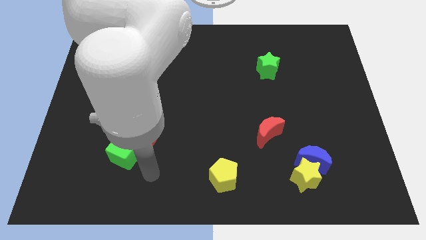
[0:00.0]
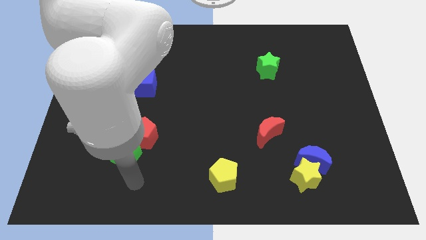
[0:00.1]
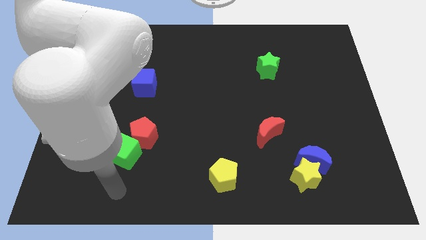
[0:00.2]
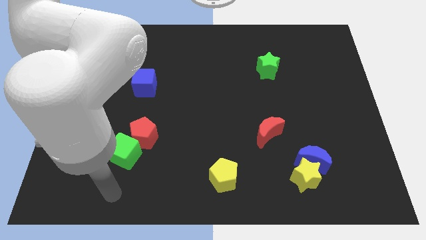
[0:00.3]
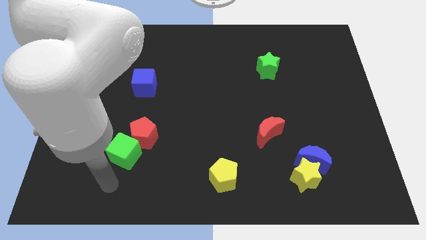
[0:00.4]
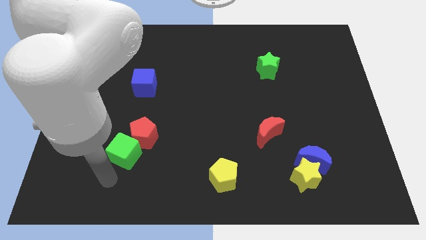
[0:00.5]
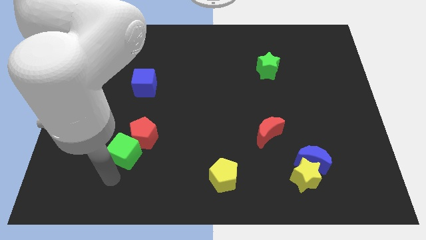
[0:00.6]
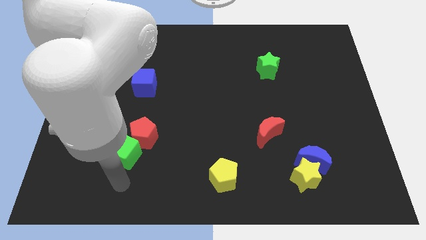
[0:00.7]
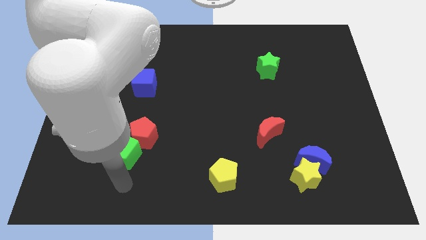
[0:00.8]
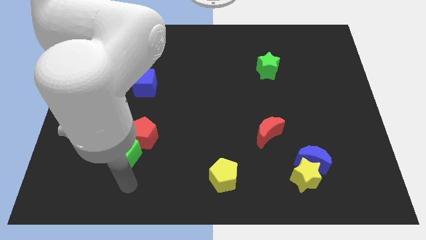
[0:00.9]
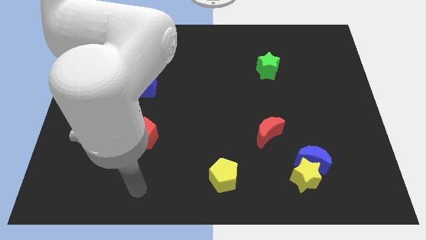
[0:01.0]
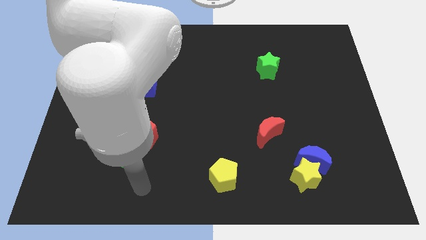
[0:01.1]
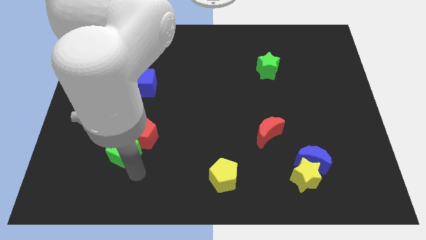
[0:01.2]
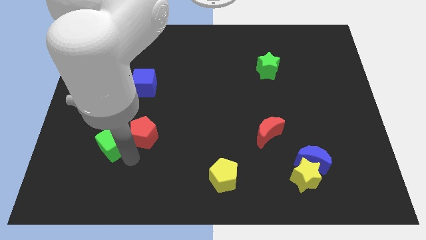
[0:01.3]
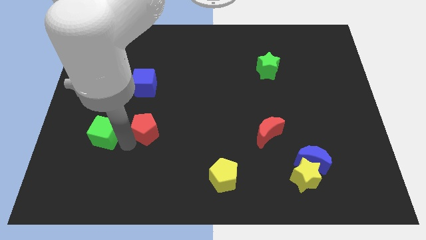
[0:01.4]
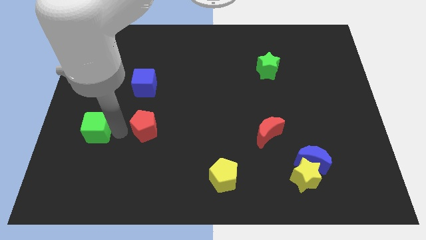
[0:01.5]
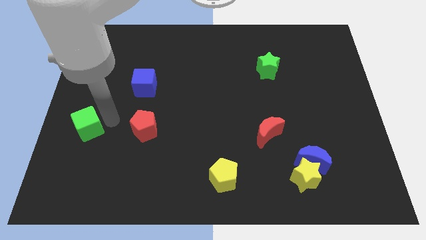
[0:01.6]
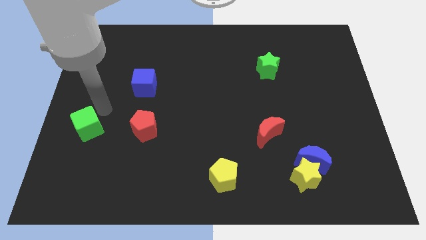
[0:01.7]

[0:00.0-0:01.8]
separate the green cube and the red pentagon

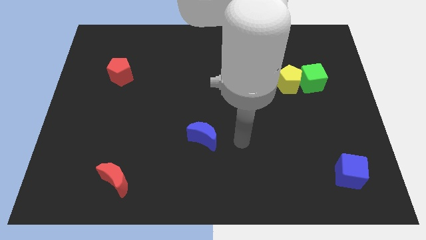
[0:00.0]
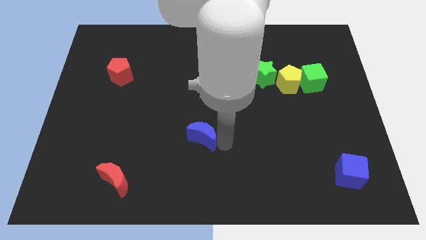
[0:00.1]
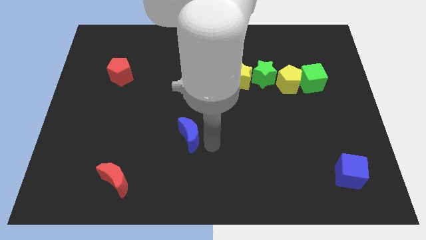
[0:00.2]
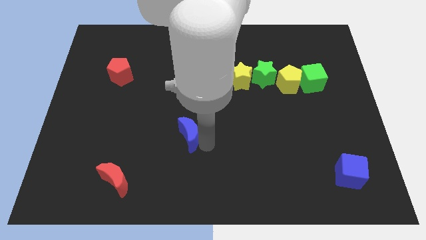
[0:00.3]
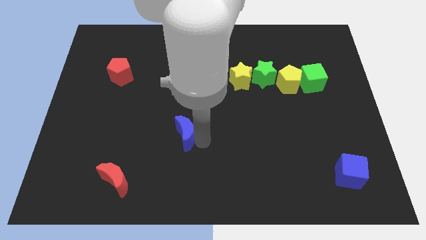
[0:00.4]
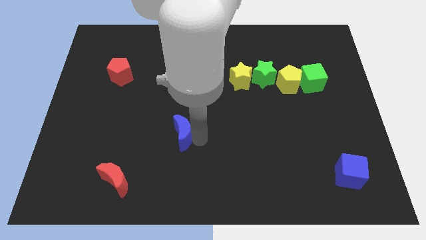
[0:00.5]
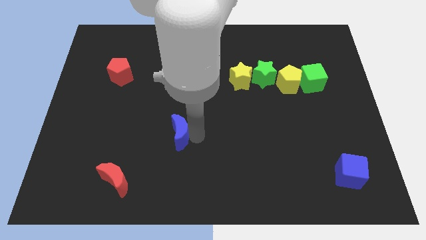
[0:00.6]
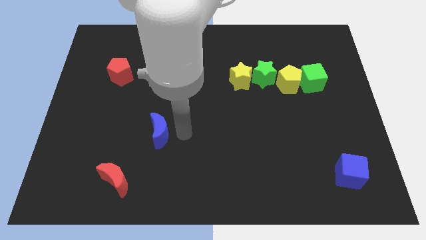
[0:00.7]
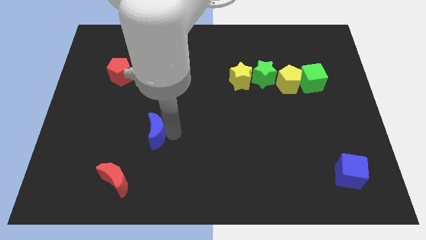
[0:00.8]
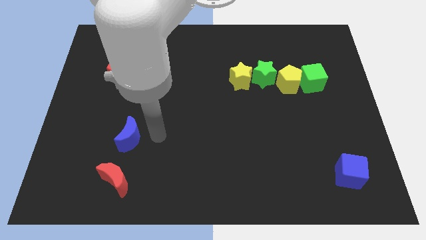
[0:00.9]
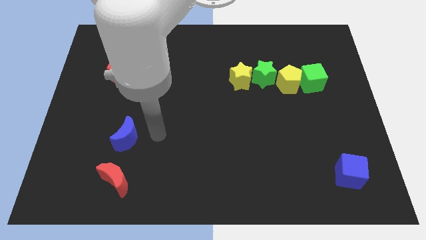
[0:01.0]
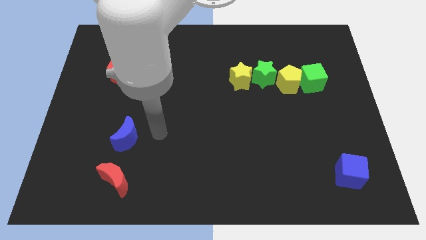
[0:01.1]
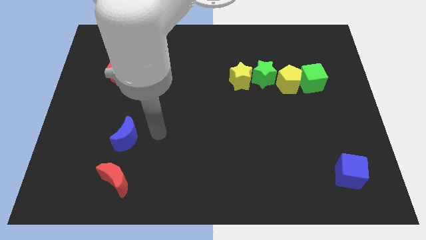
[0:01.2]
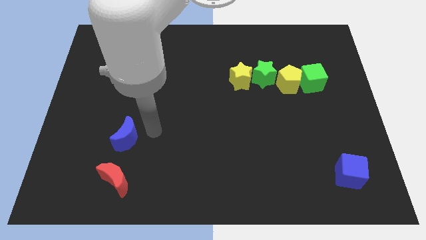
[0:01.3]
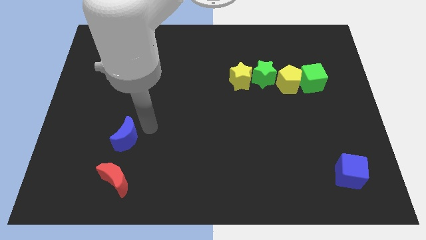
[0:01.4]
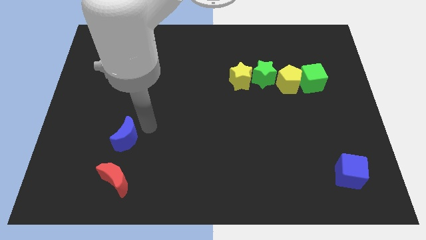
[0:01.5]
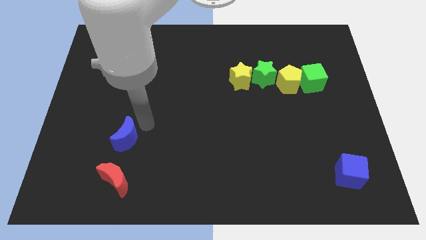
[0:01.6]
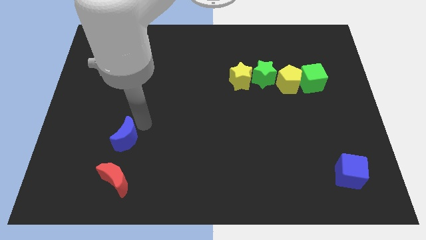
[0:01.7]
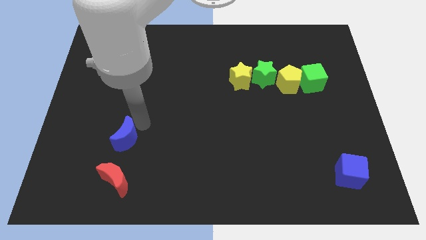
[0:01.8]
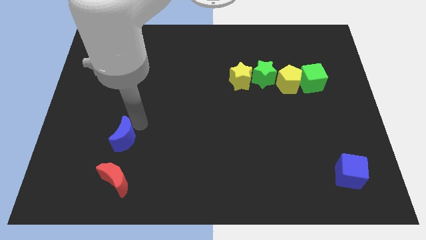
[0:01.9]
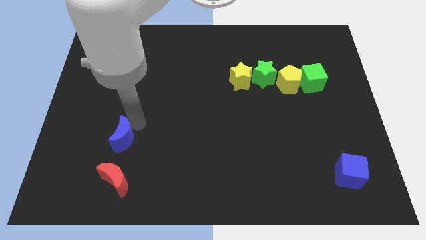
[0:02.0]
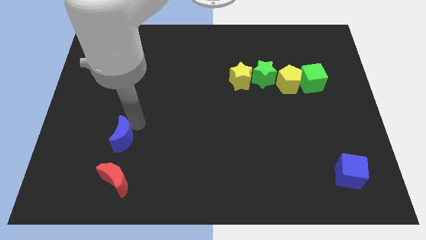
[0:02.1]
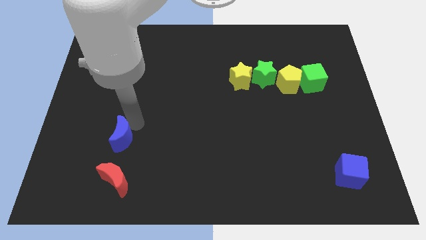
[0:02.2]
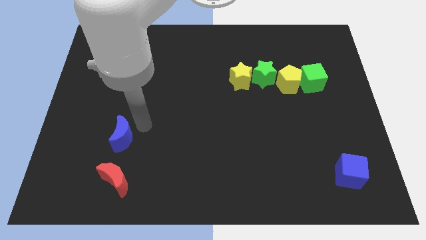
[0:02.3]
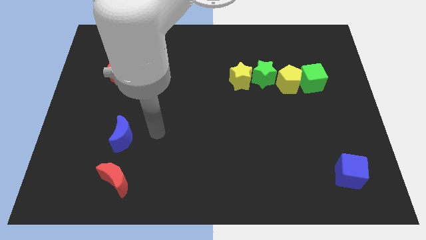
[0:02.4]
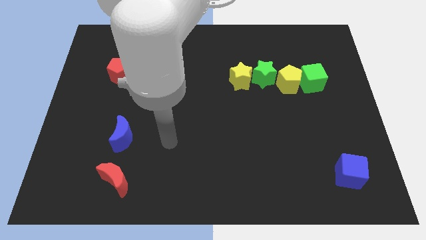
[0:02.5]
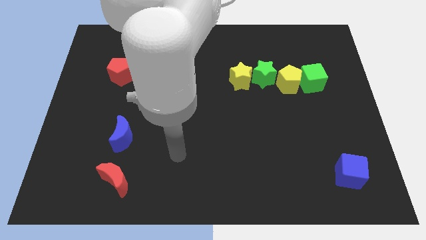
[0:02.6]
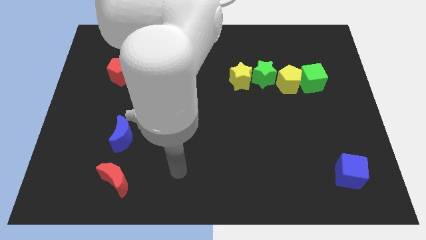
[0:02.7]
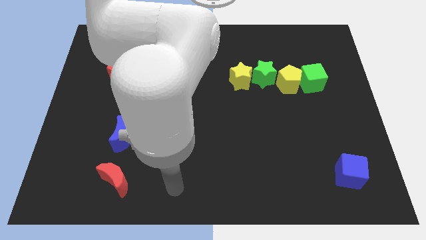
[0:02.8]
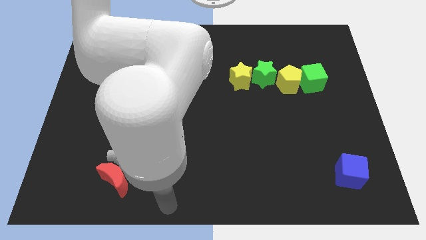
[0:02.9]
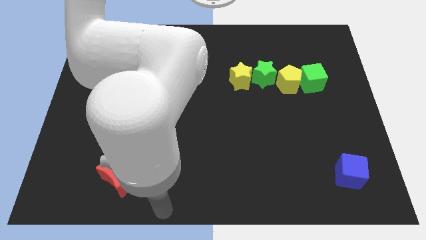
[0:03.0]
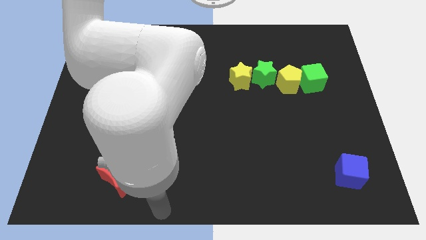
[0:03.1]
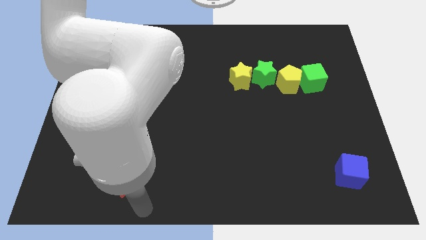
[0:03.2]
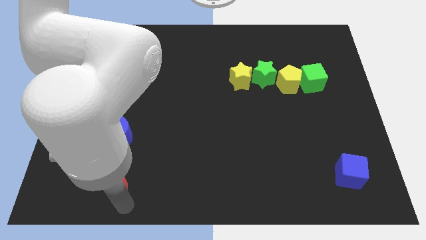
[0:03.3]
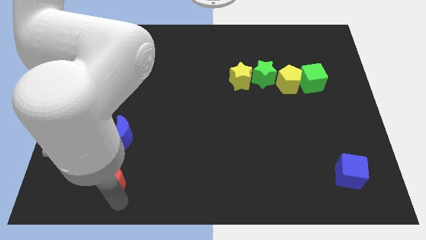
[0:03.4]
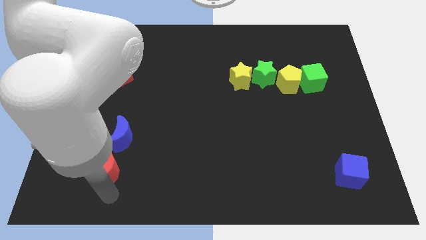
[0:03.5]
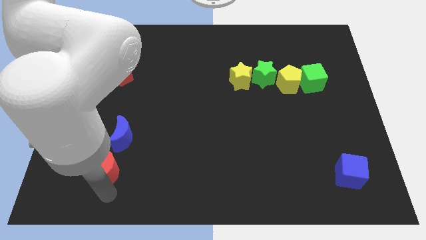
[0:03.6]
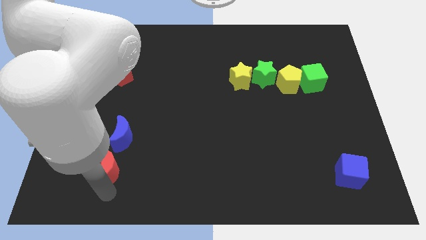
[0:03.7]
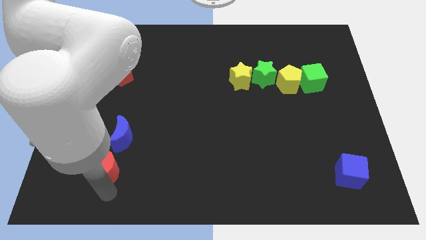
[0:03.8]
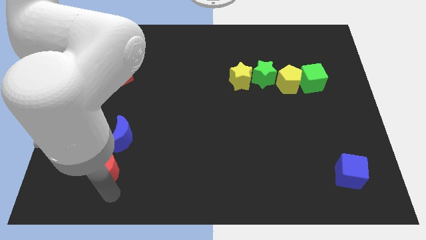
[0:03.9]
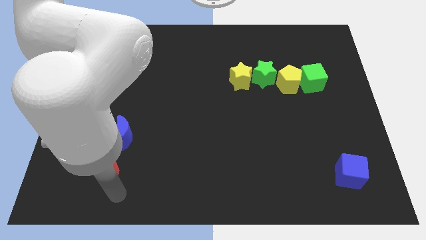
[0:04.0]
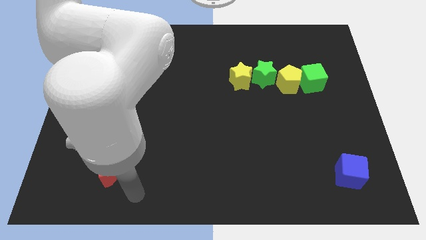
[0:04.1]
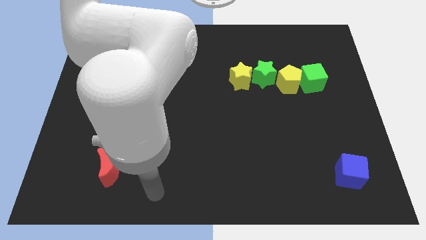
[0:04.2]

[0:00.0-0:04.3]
move the red moon close to the blue moon

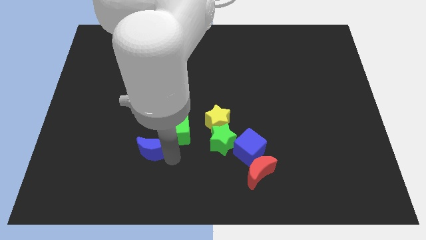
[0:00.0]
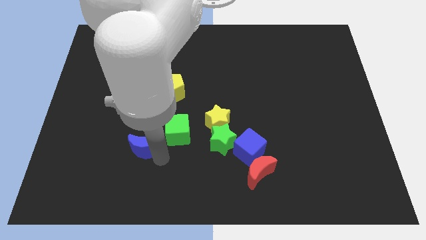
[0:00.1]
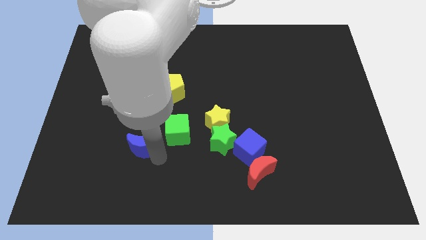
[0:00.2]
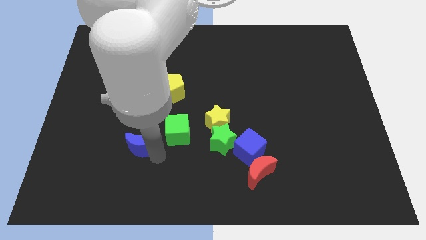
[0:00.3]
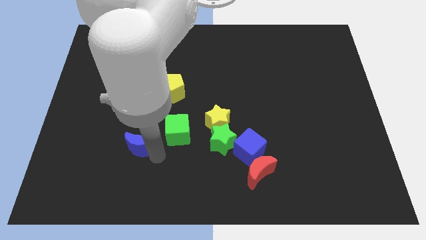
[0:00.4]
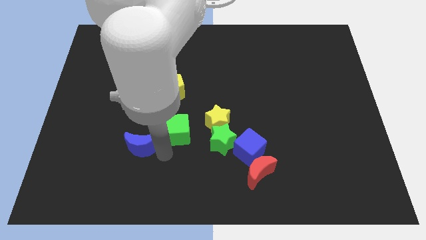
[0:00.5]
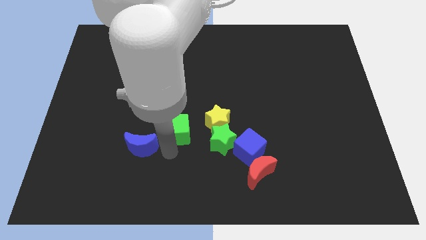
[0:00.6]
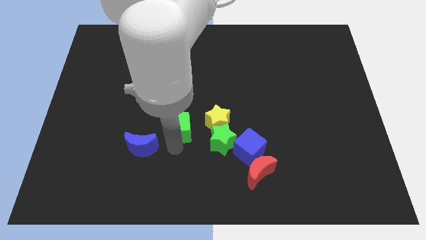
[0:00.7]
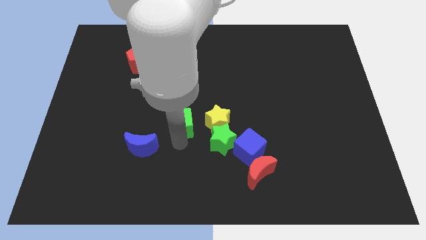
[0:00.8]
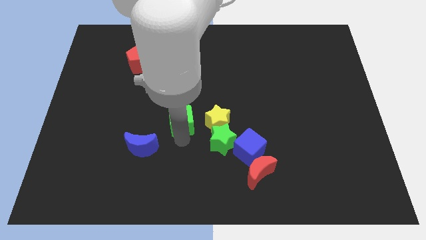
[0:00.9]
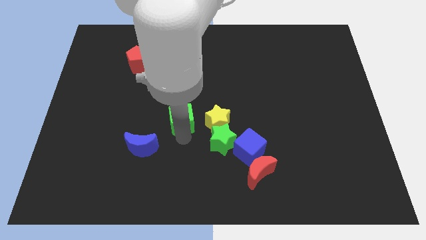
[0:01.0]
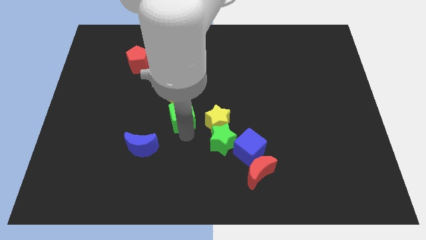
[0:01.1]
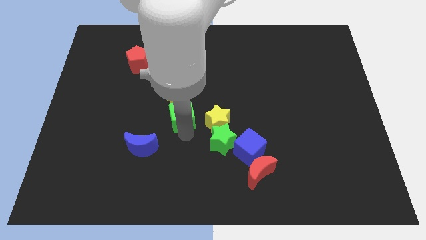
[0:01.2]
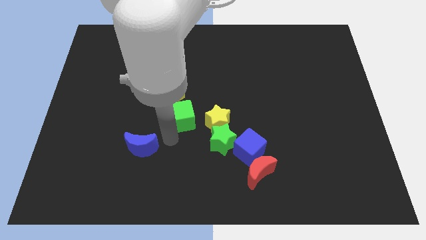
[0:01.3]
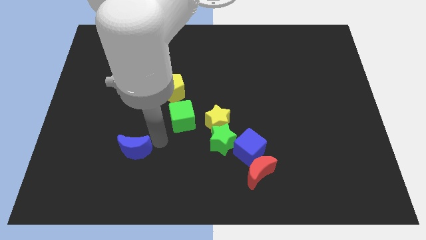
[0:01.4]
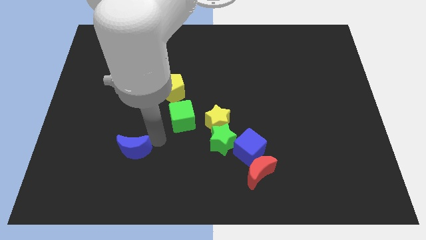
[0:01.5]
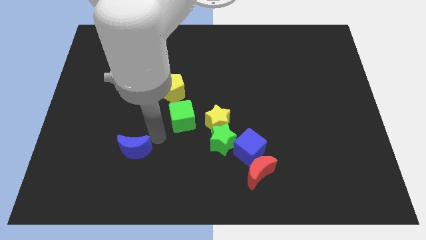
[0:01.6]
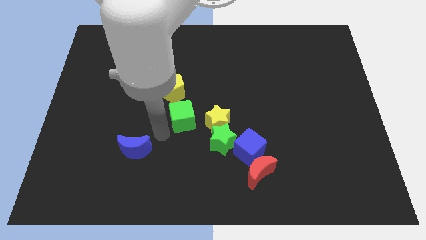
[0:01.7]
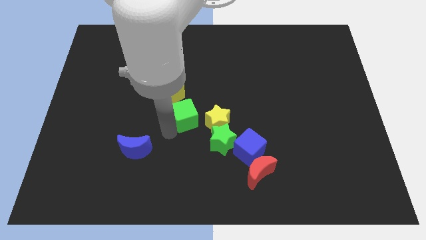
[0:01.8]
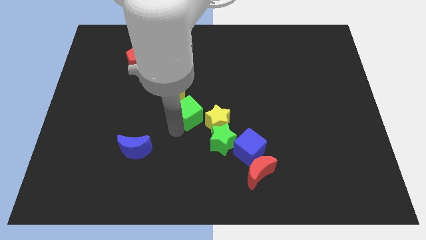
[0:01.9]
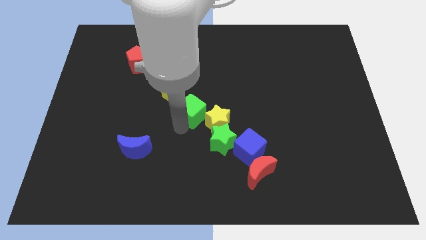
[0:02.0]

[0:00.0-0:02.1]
separate blue moon from the green cube

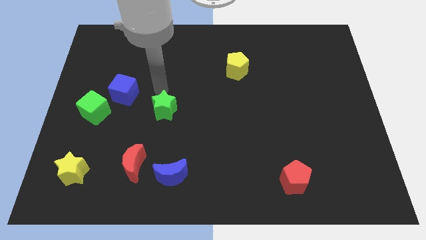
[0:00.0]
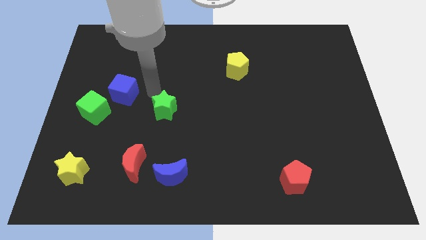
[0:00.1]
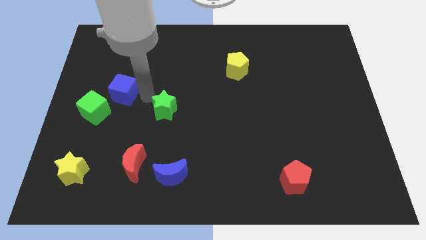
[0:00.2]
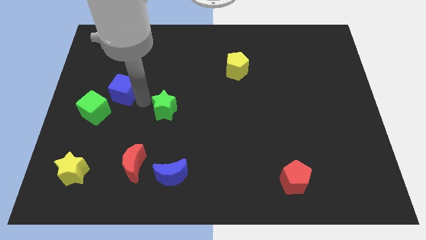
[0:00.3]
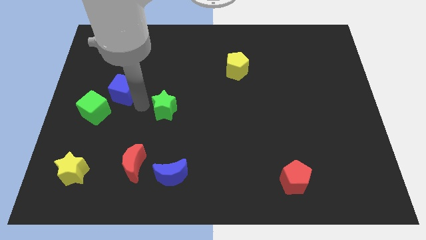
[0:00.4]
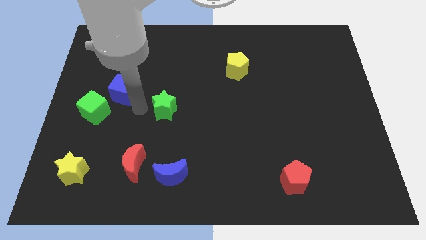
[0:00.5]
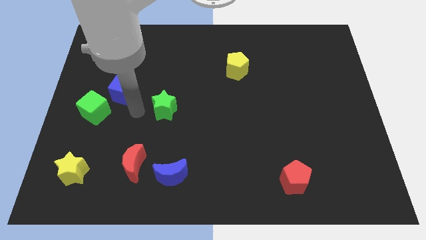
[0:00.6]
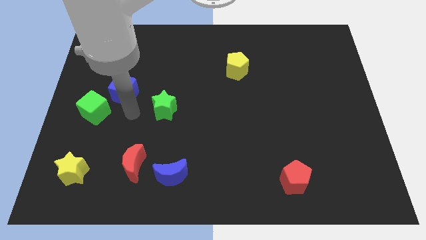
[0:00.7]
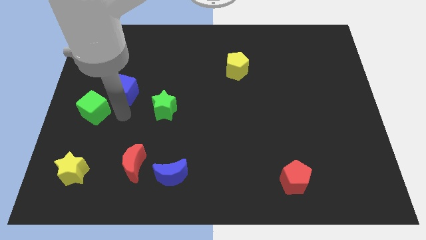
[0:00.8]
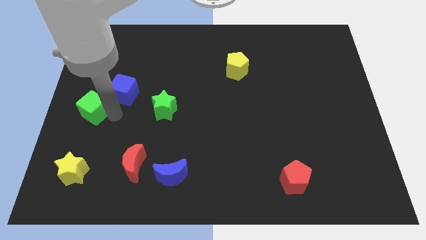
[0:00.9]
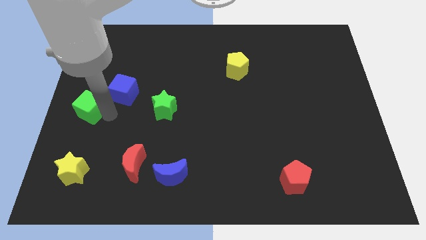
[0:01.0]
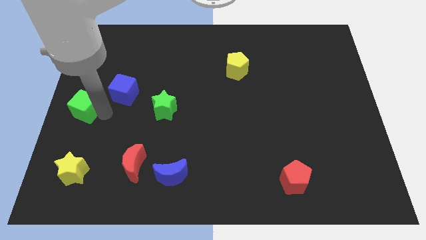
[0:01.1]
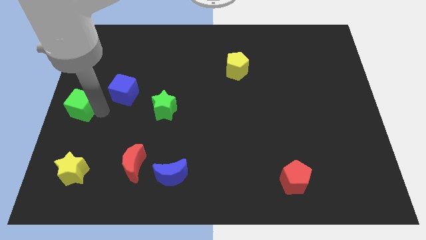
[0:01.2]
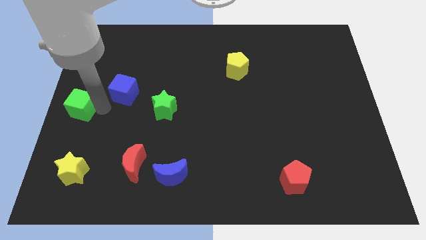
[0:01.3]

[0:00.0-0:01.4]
move the green cube slightly to the left
